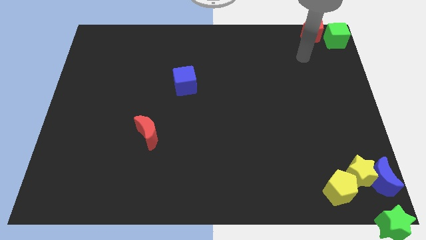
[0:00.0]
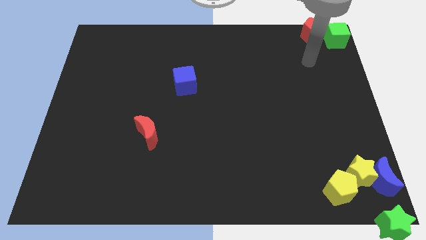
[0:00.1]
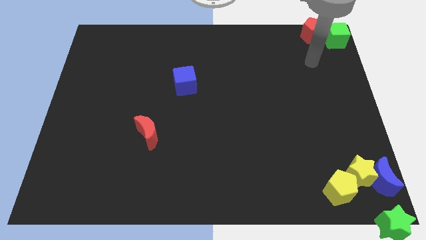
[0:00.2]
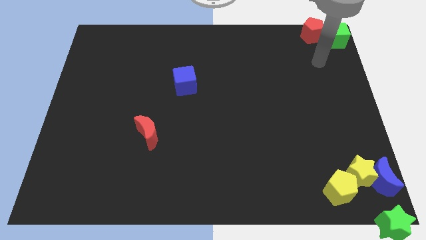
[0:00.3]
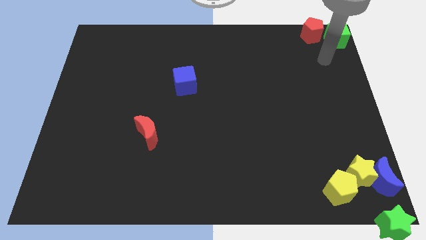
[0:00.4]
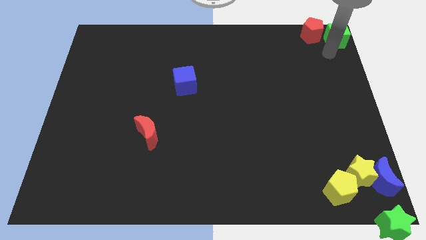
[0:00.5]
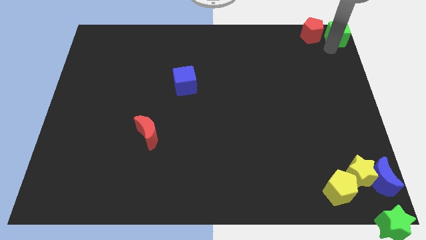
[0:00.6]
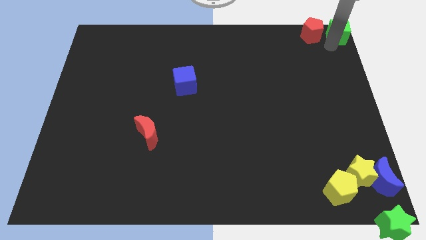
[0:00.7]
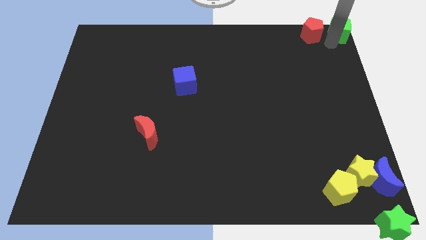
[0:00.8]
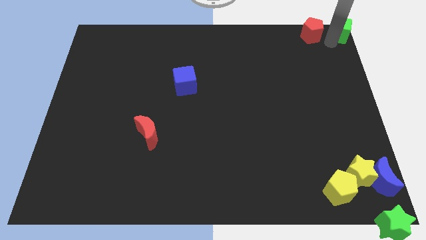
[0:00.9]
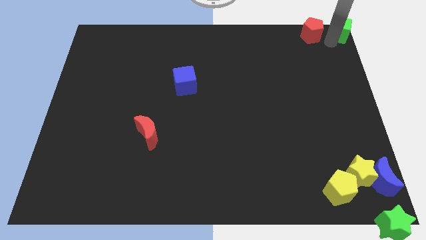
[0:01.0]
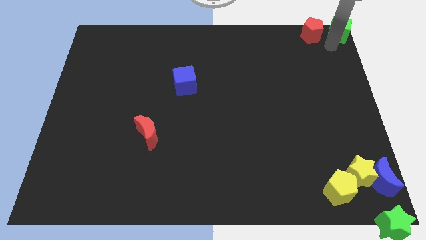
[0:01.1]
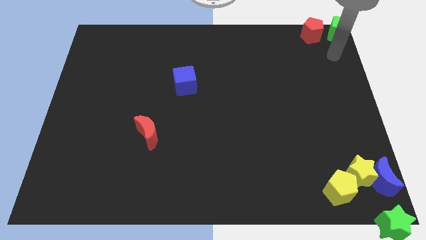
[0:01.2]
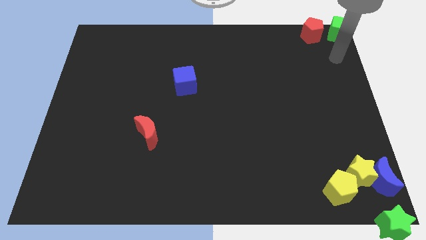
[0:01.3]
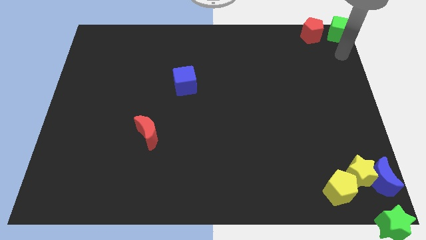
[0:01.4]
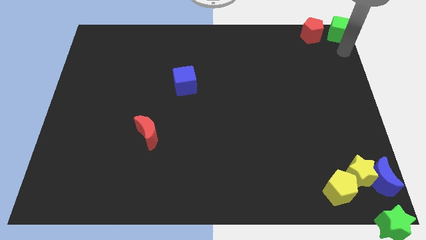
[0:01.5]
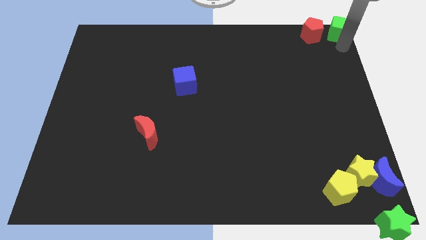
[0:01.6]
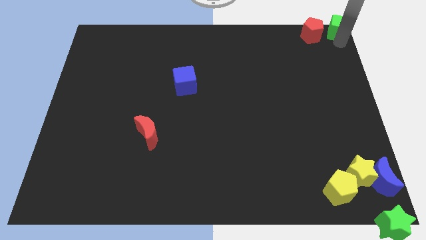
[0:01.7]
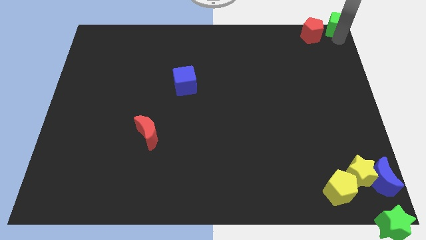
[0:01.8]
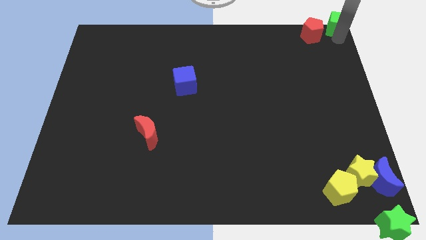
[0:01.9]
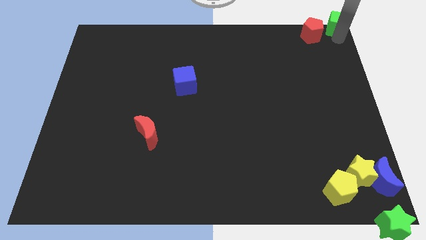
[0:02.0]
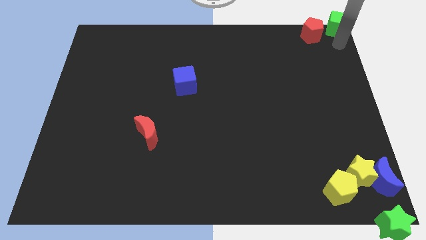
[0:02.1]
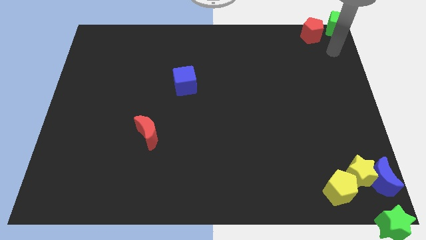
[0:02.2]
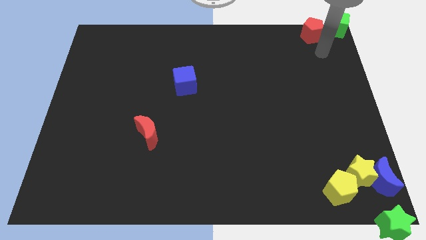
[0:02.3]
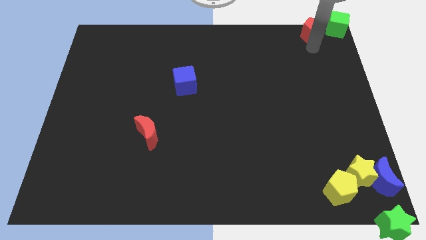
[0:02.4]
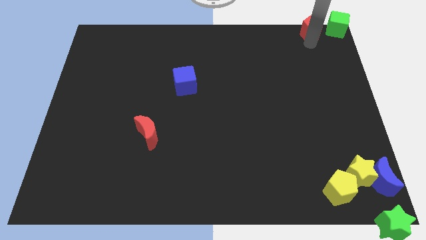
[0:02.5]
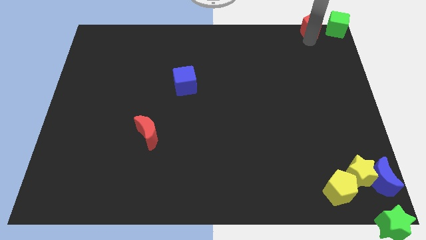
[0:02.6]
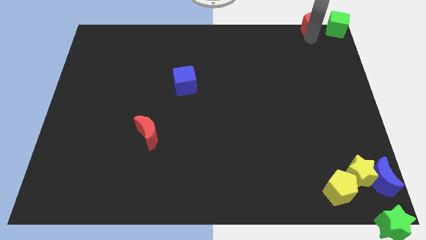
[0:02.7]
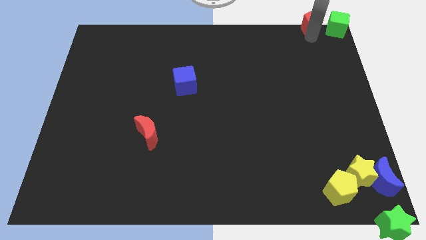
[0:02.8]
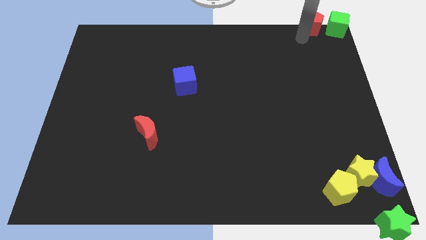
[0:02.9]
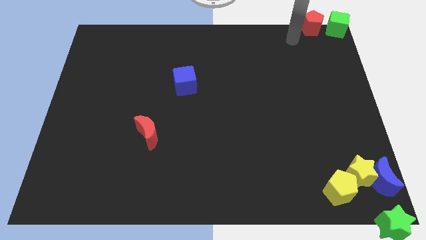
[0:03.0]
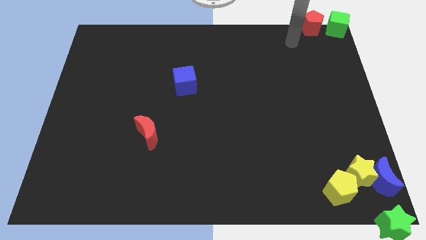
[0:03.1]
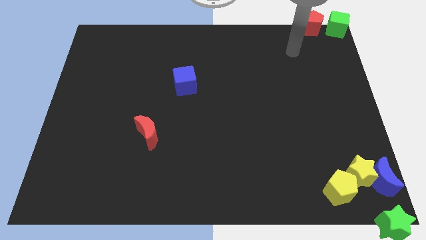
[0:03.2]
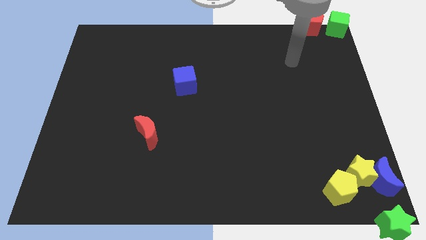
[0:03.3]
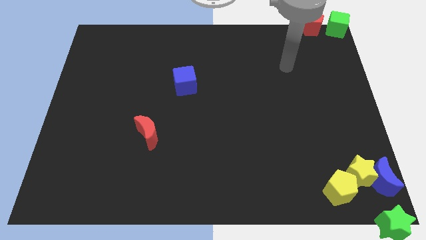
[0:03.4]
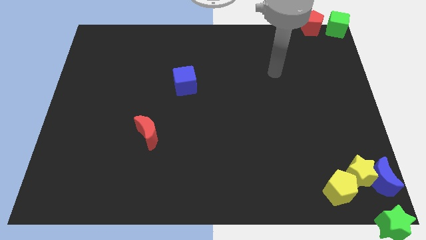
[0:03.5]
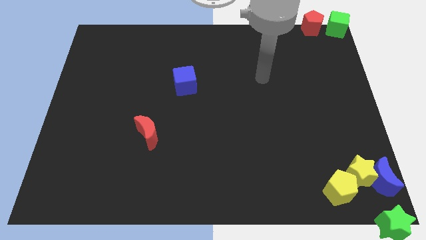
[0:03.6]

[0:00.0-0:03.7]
put the red pentagon and green cube at the top right corner of the board

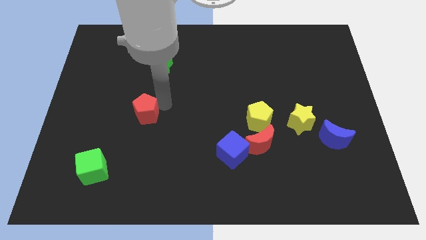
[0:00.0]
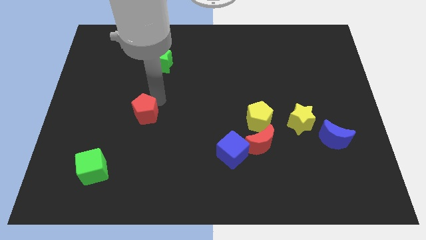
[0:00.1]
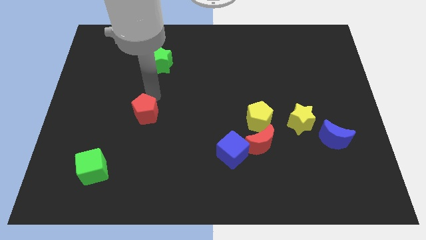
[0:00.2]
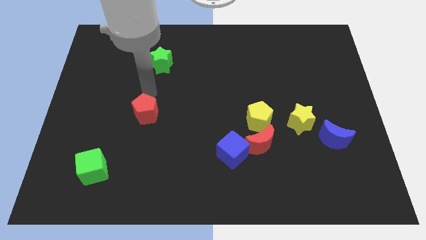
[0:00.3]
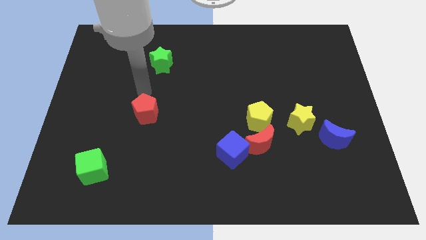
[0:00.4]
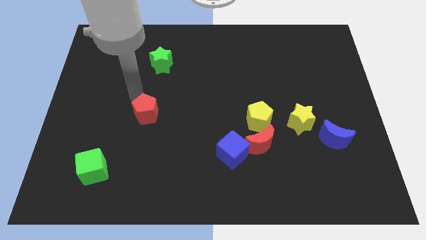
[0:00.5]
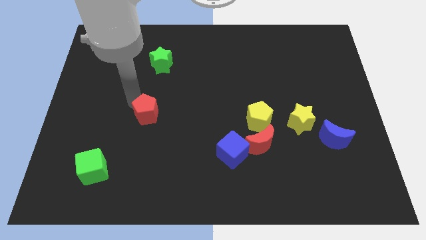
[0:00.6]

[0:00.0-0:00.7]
place your arm above red pentagon

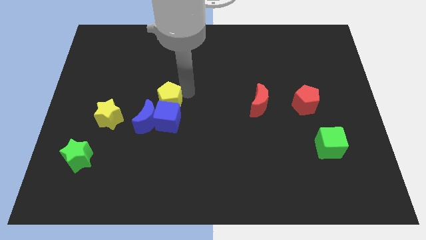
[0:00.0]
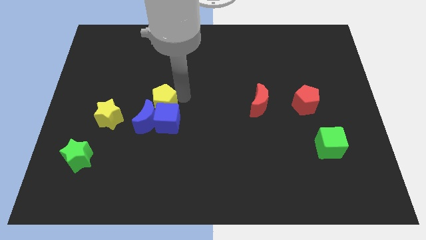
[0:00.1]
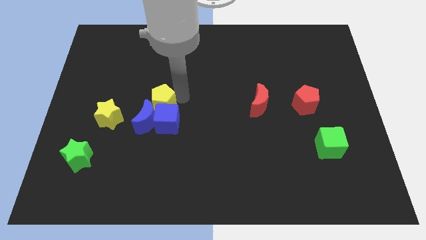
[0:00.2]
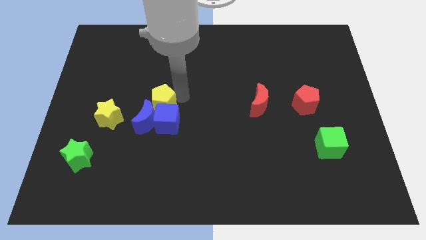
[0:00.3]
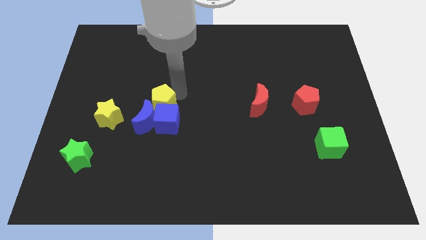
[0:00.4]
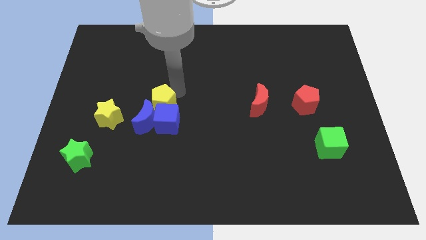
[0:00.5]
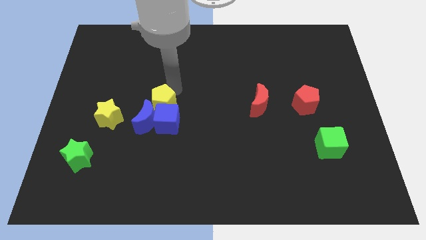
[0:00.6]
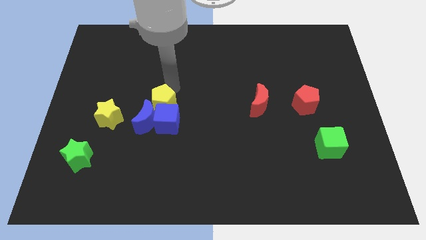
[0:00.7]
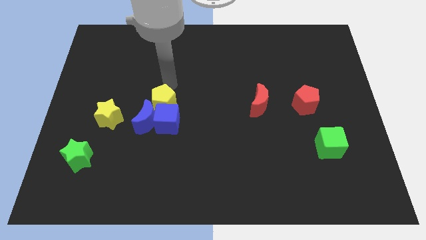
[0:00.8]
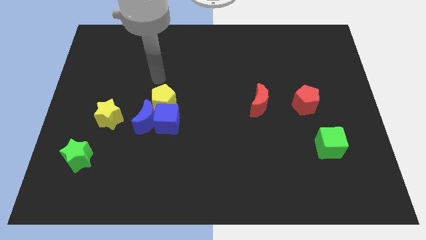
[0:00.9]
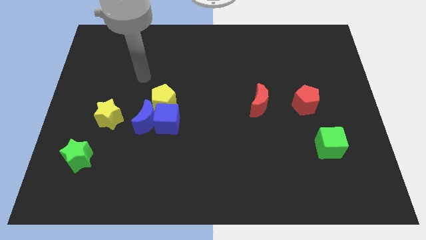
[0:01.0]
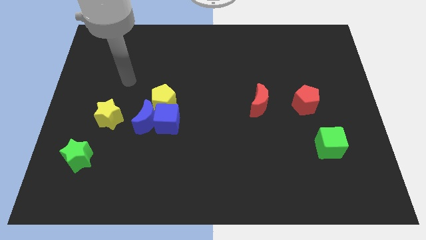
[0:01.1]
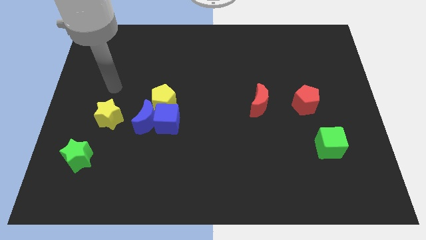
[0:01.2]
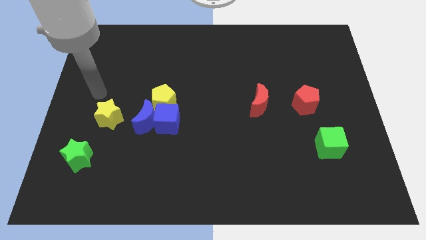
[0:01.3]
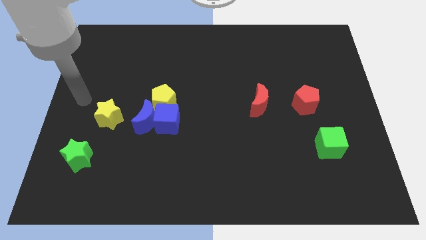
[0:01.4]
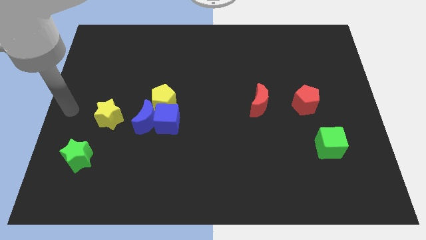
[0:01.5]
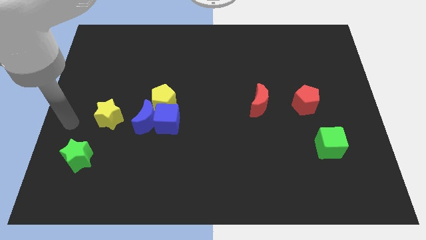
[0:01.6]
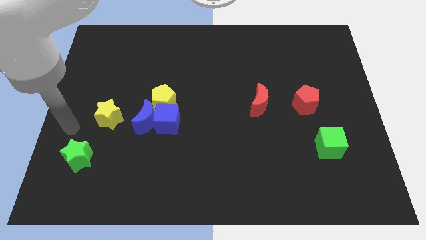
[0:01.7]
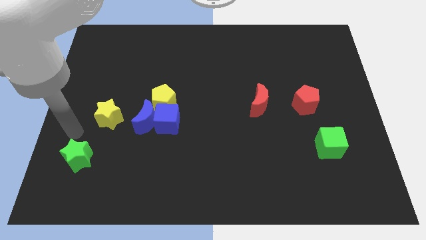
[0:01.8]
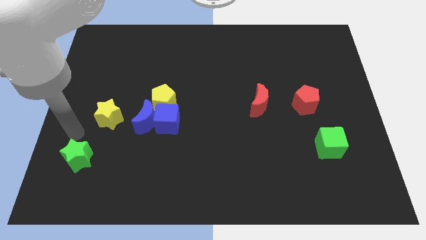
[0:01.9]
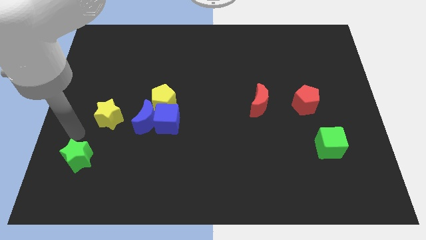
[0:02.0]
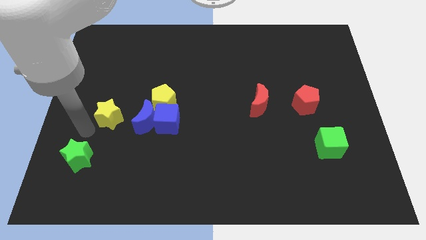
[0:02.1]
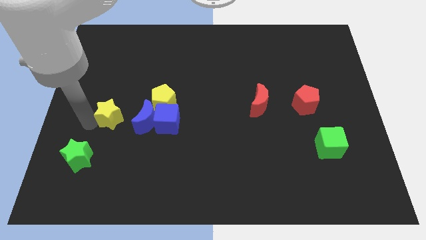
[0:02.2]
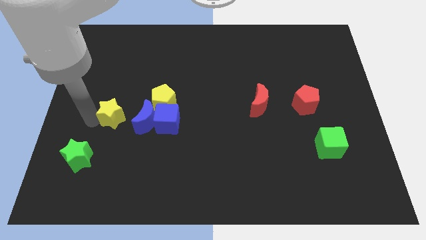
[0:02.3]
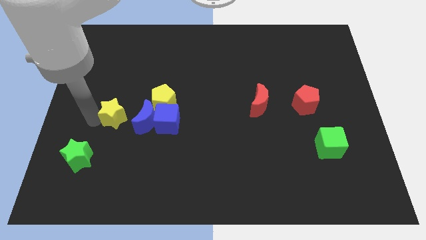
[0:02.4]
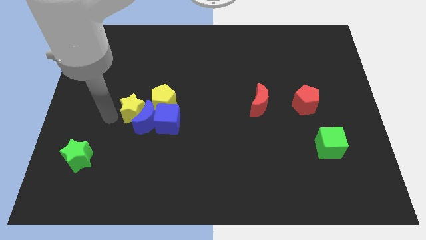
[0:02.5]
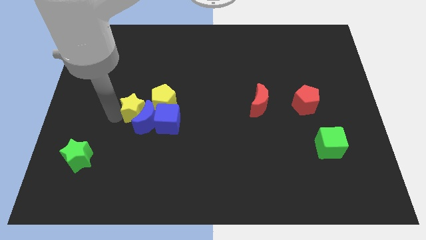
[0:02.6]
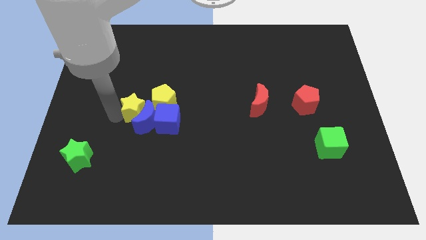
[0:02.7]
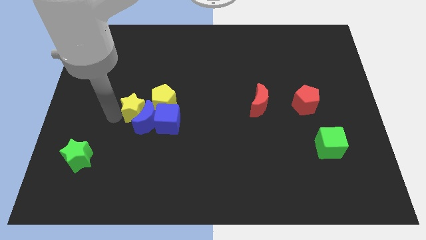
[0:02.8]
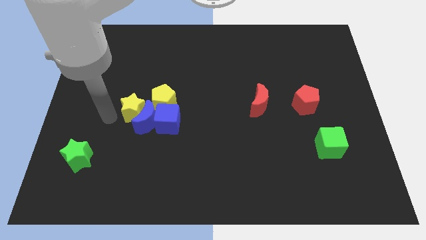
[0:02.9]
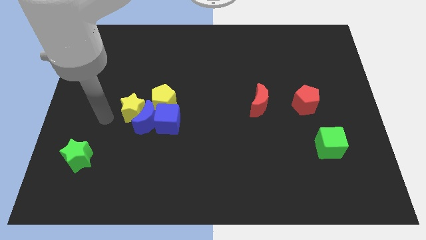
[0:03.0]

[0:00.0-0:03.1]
move the yellow star to the left of the blue moon

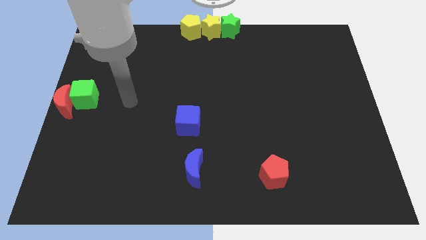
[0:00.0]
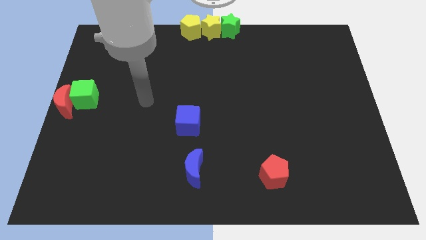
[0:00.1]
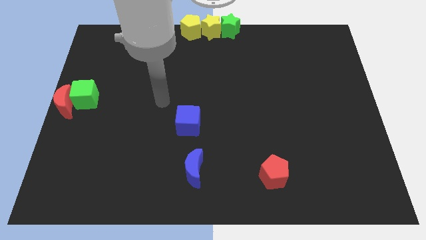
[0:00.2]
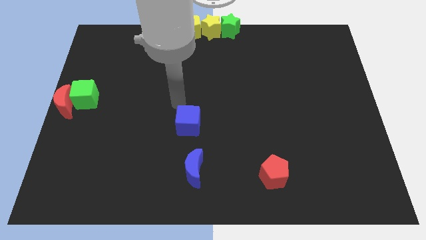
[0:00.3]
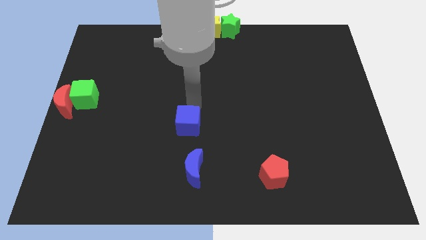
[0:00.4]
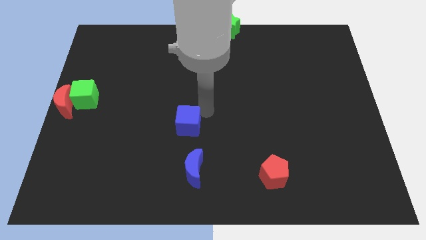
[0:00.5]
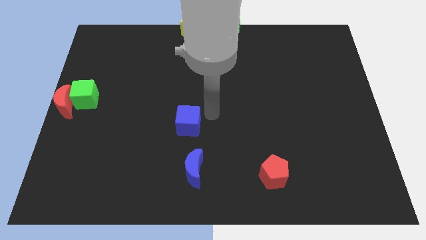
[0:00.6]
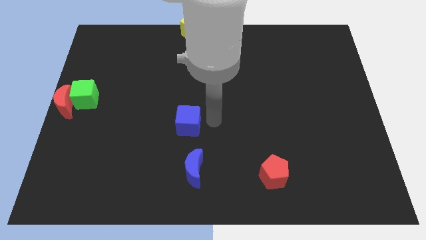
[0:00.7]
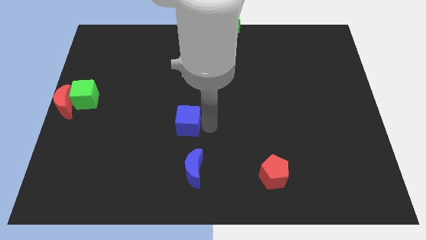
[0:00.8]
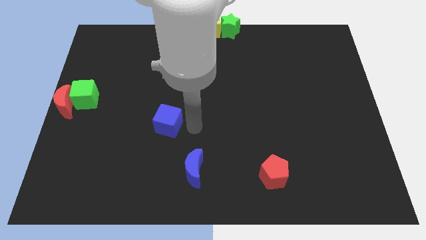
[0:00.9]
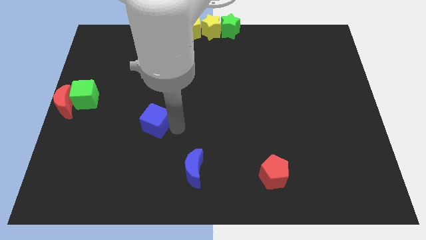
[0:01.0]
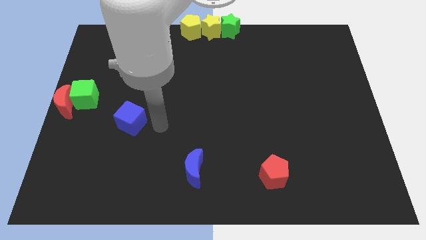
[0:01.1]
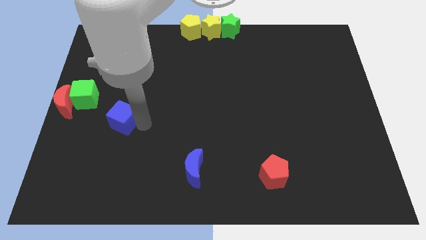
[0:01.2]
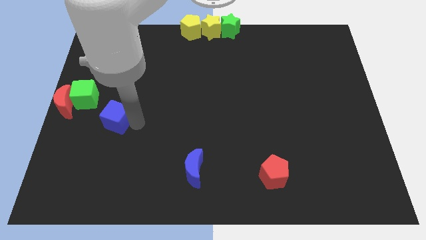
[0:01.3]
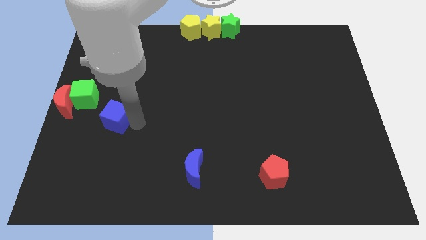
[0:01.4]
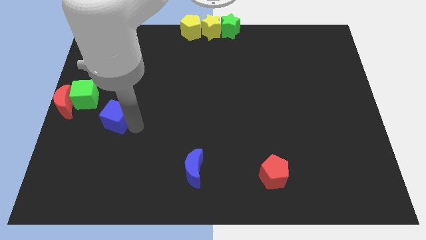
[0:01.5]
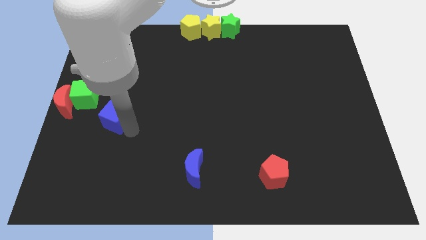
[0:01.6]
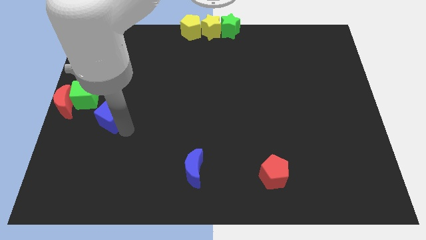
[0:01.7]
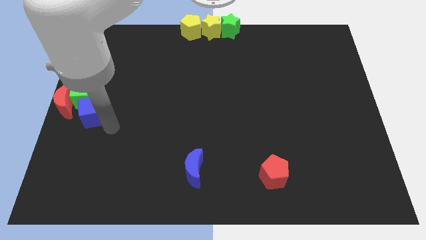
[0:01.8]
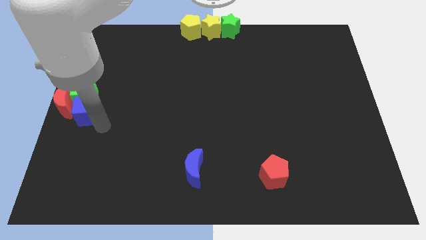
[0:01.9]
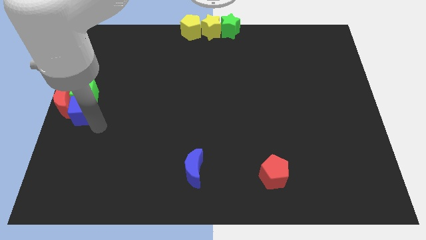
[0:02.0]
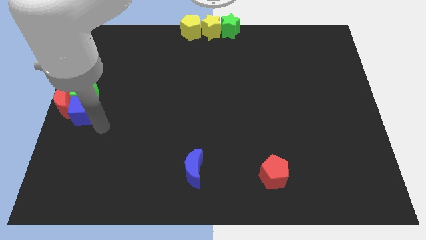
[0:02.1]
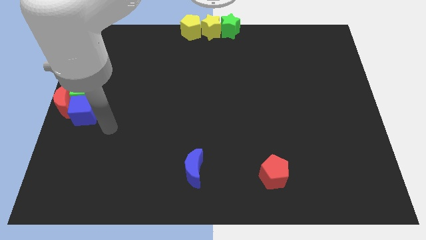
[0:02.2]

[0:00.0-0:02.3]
push the blue cube below the green cube
